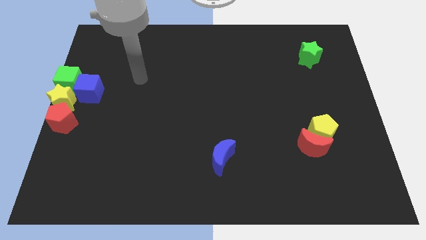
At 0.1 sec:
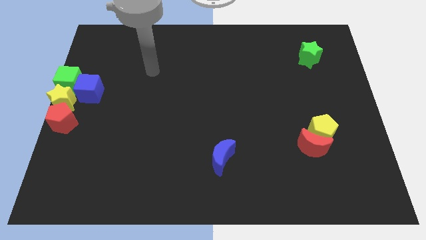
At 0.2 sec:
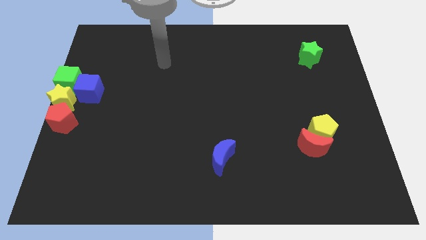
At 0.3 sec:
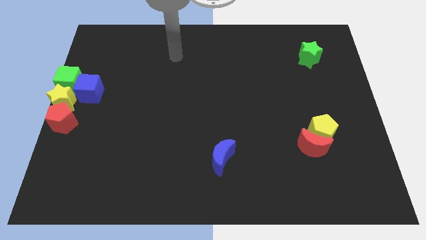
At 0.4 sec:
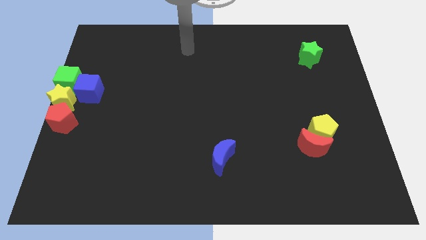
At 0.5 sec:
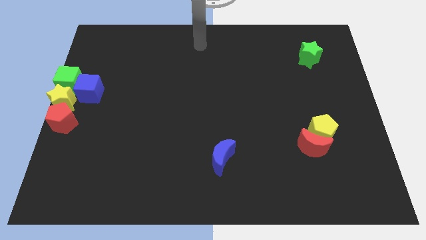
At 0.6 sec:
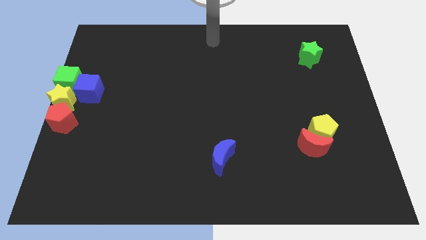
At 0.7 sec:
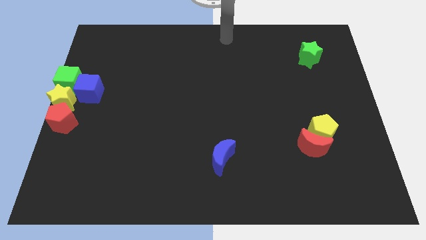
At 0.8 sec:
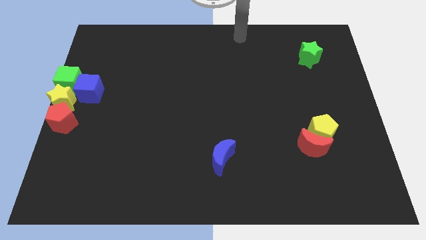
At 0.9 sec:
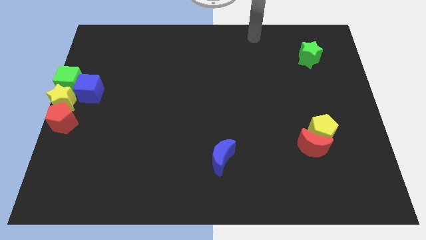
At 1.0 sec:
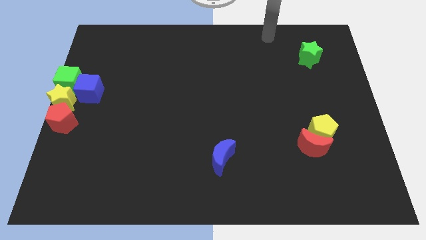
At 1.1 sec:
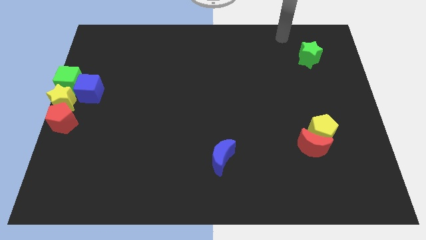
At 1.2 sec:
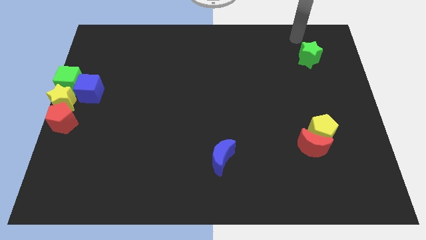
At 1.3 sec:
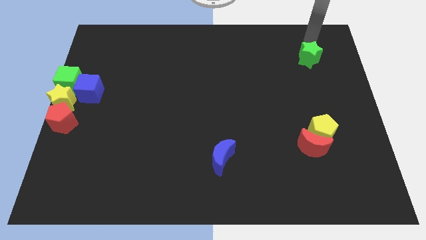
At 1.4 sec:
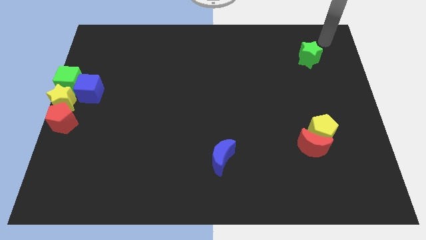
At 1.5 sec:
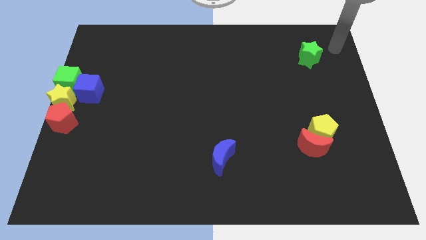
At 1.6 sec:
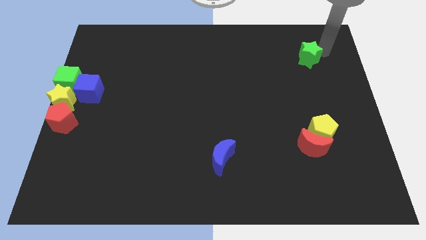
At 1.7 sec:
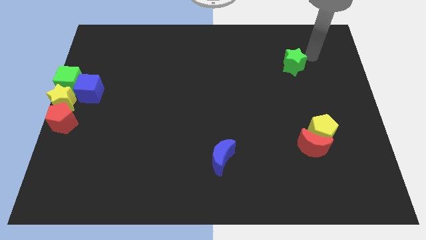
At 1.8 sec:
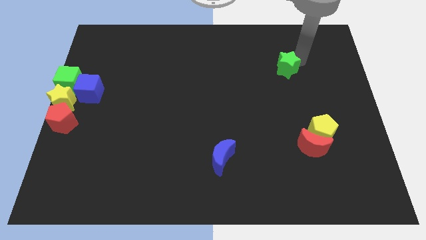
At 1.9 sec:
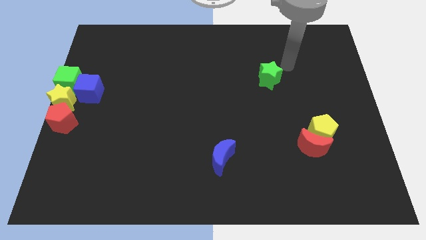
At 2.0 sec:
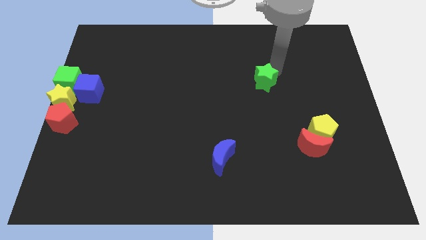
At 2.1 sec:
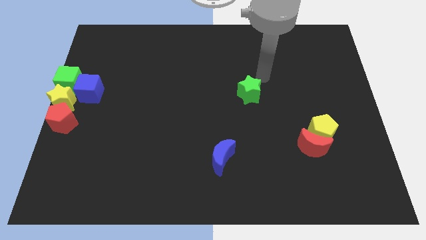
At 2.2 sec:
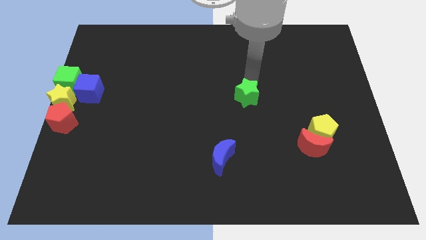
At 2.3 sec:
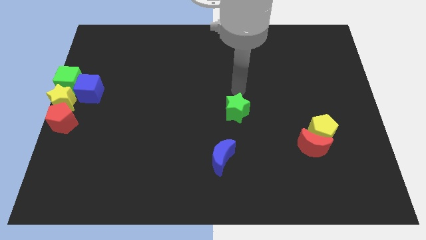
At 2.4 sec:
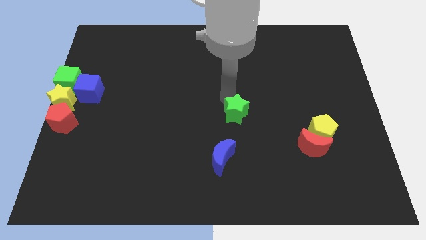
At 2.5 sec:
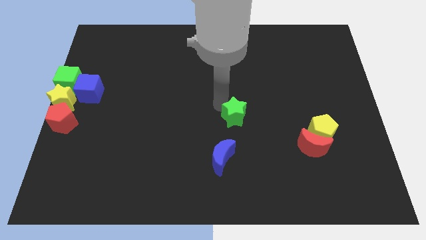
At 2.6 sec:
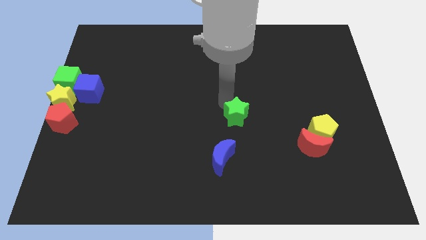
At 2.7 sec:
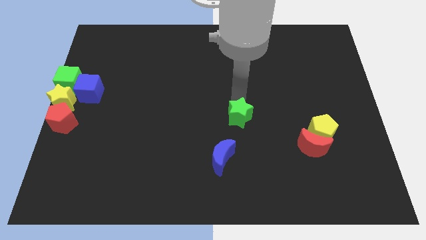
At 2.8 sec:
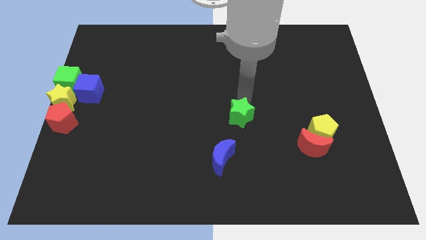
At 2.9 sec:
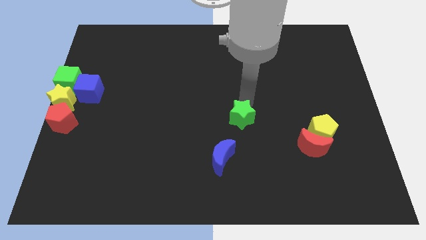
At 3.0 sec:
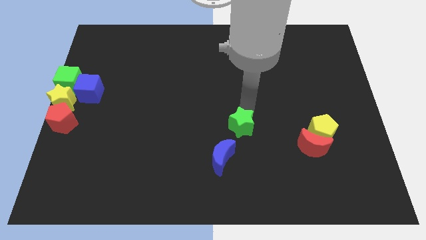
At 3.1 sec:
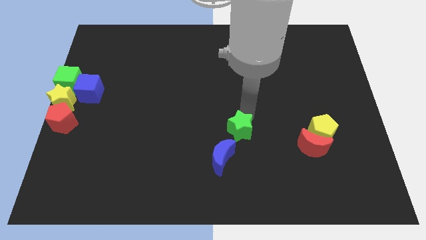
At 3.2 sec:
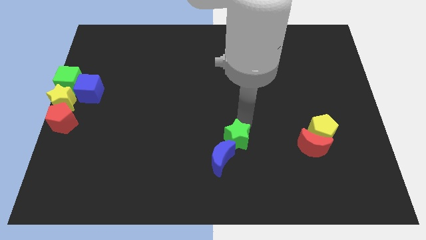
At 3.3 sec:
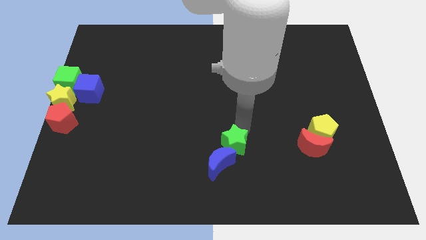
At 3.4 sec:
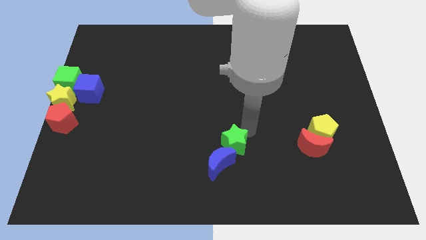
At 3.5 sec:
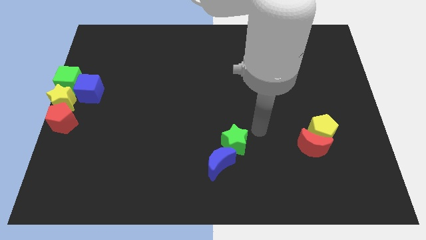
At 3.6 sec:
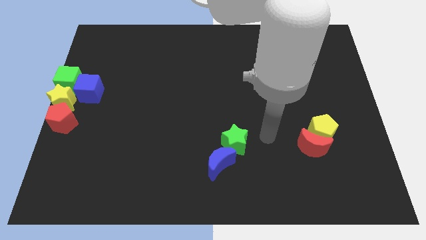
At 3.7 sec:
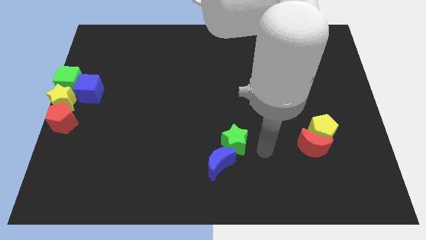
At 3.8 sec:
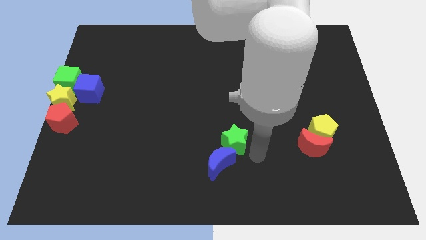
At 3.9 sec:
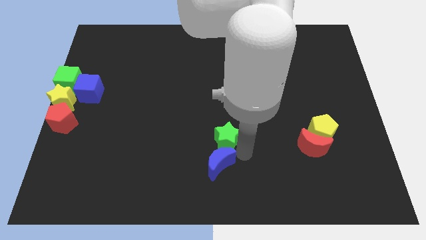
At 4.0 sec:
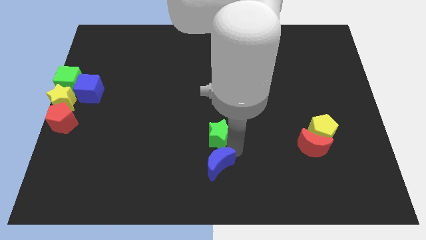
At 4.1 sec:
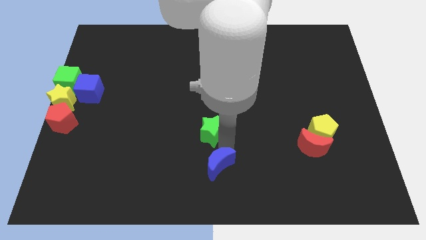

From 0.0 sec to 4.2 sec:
push the green star into the blue crescent

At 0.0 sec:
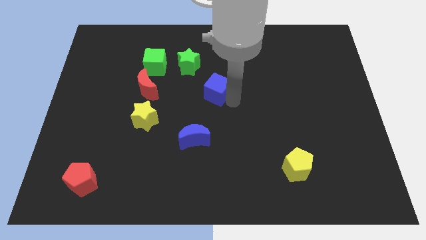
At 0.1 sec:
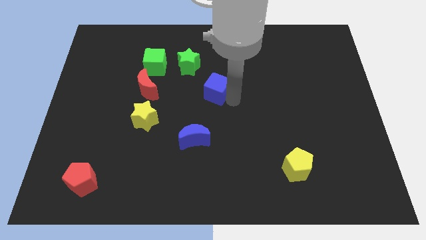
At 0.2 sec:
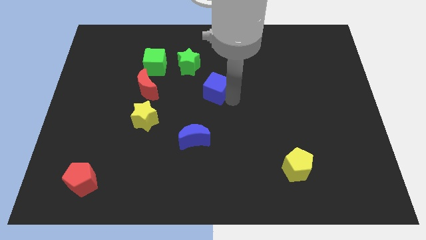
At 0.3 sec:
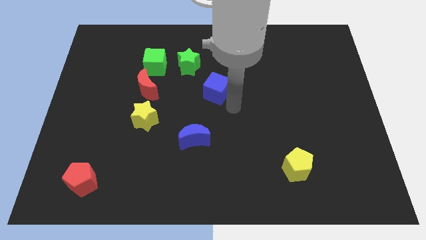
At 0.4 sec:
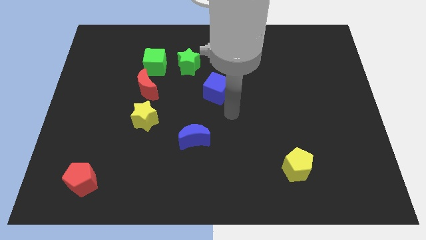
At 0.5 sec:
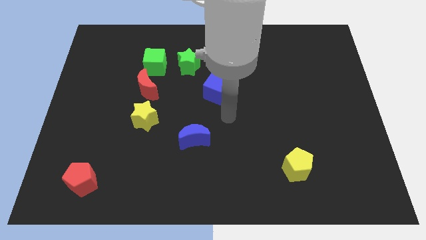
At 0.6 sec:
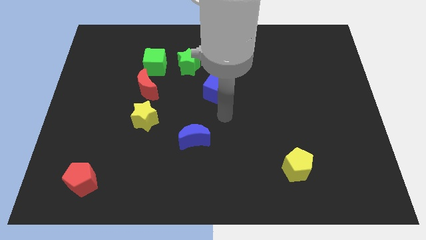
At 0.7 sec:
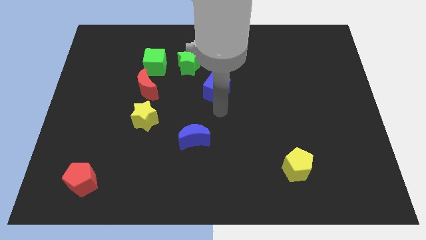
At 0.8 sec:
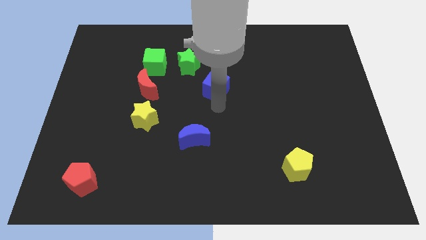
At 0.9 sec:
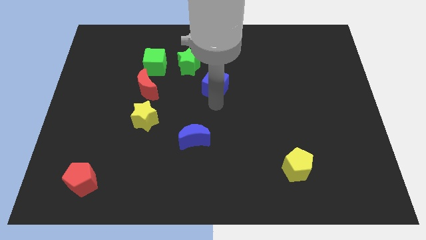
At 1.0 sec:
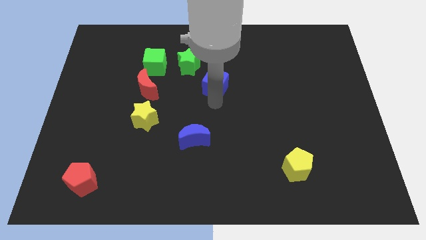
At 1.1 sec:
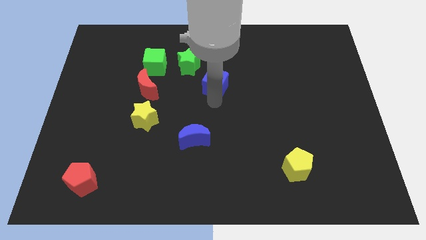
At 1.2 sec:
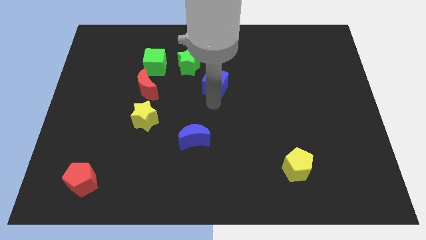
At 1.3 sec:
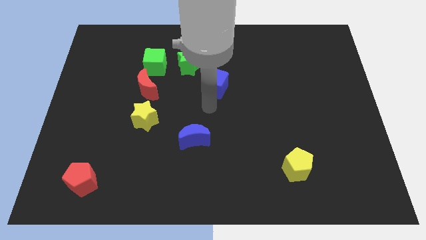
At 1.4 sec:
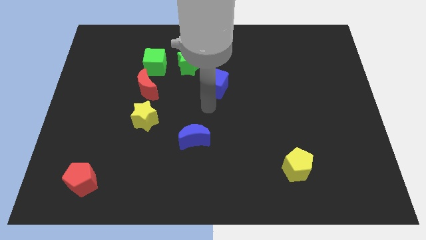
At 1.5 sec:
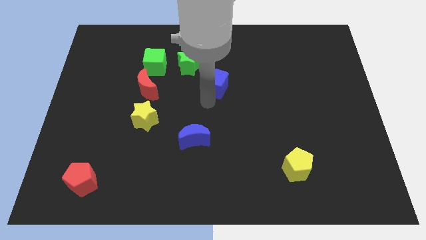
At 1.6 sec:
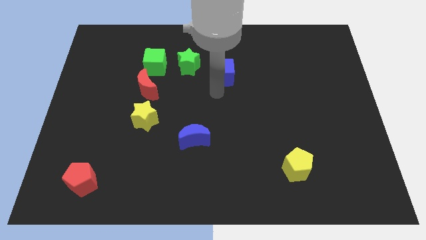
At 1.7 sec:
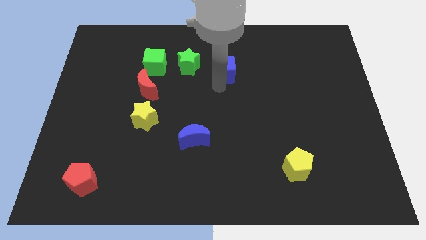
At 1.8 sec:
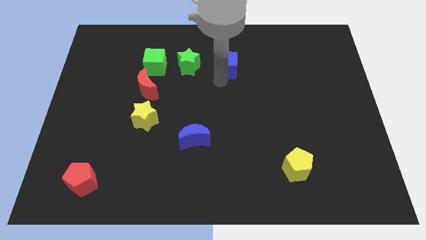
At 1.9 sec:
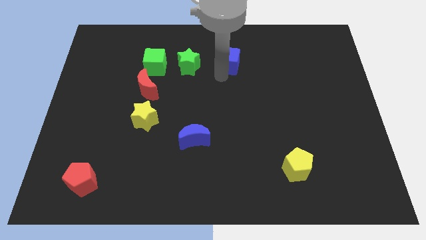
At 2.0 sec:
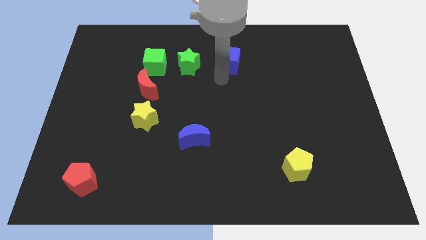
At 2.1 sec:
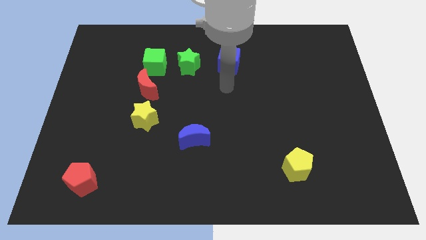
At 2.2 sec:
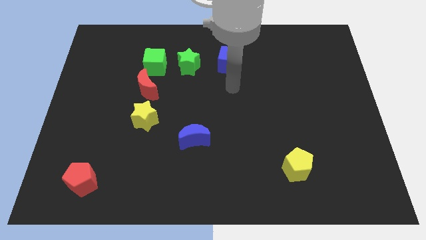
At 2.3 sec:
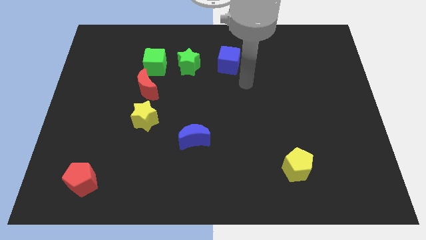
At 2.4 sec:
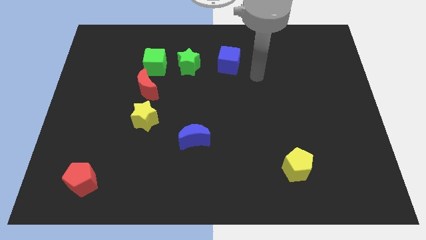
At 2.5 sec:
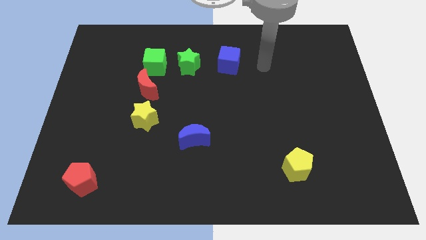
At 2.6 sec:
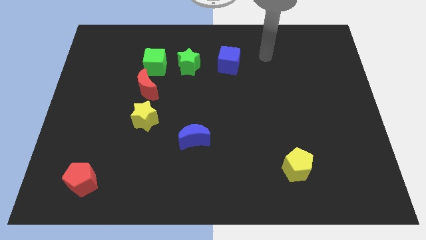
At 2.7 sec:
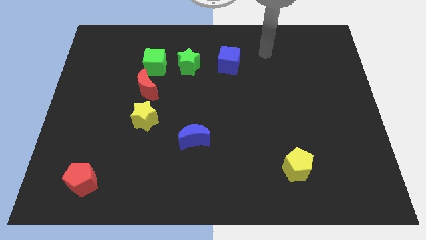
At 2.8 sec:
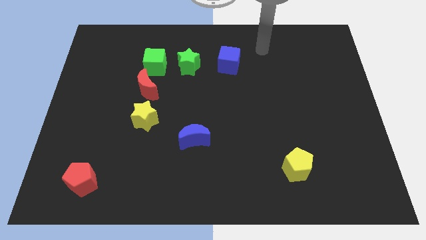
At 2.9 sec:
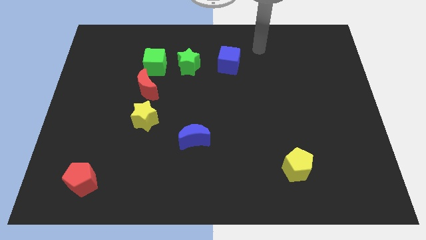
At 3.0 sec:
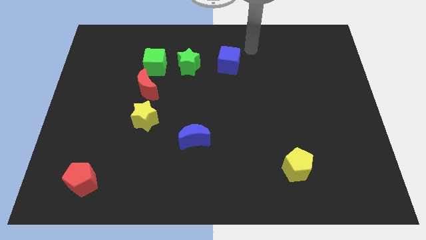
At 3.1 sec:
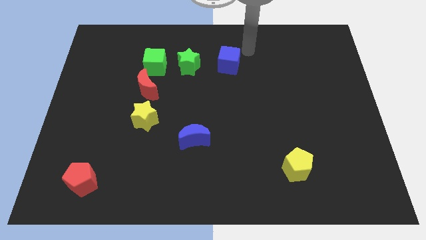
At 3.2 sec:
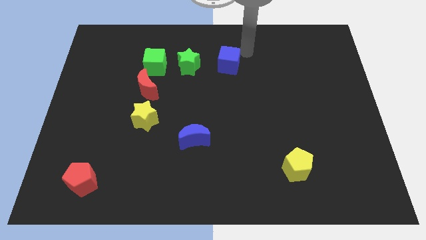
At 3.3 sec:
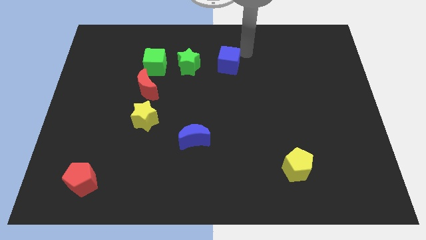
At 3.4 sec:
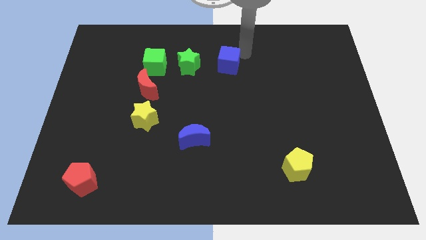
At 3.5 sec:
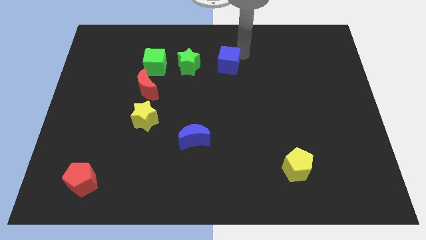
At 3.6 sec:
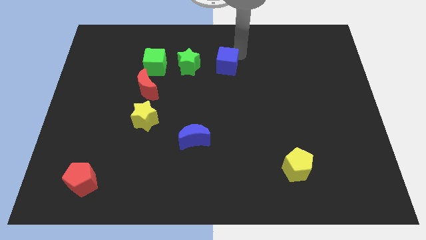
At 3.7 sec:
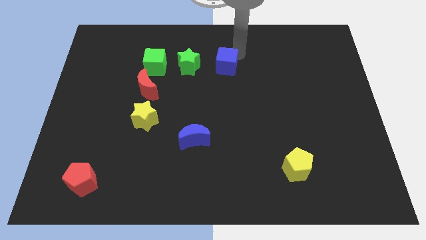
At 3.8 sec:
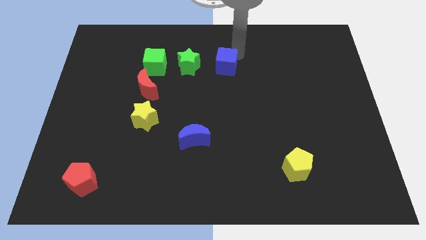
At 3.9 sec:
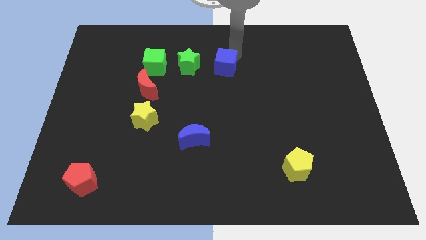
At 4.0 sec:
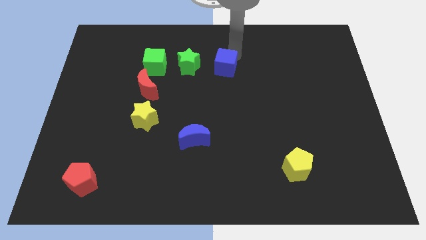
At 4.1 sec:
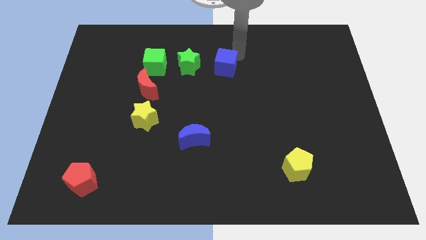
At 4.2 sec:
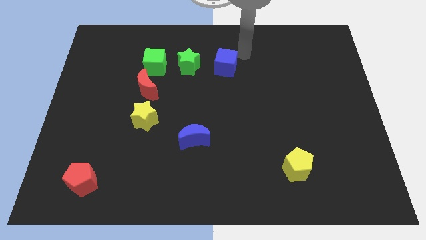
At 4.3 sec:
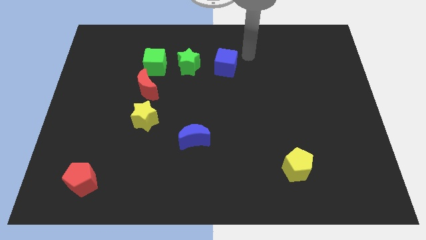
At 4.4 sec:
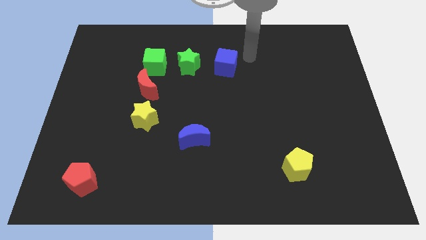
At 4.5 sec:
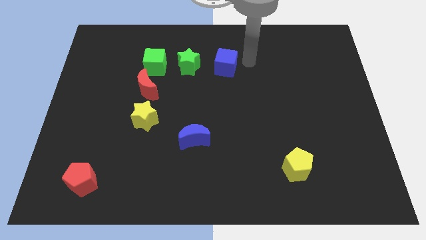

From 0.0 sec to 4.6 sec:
place the blue cube to the right of green star

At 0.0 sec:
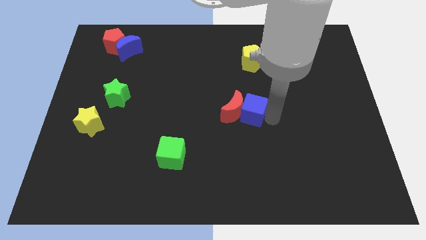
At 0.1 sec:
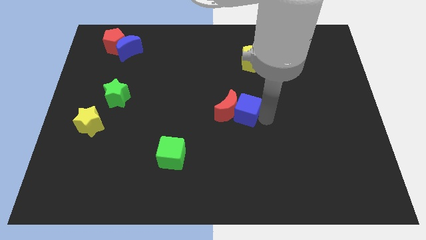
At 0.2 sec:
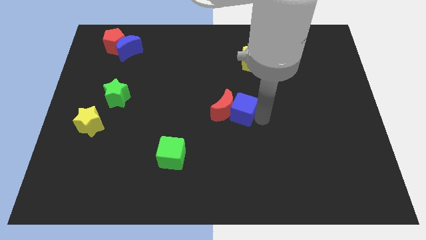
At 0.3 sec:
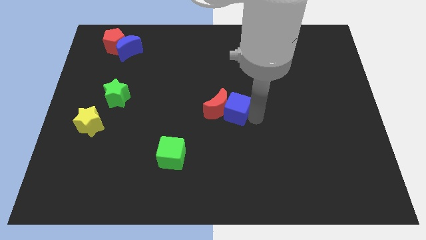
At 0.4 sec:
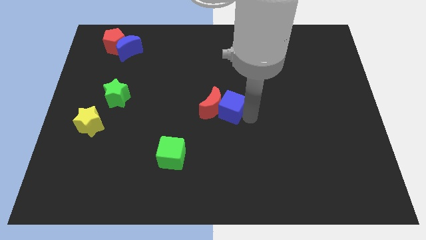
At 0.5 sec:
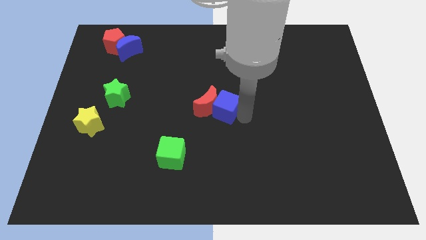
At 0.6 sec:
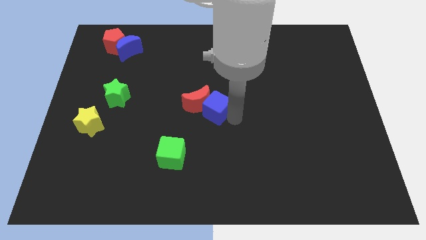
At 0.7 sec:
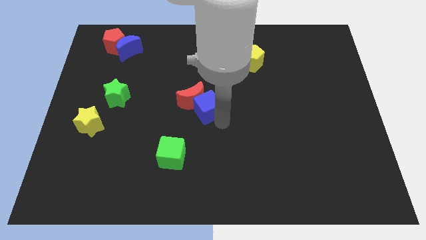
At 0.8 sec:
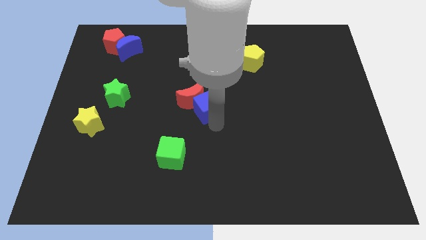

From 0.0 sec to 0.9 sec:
push the red moon and blue cube to the center of the board
